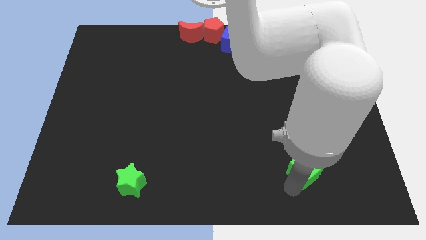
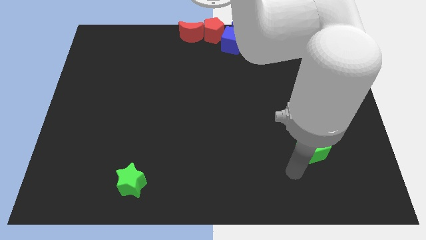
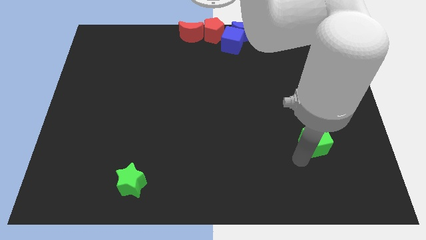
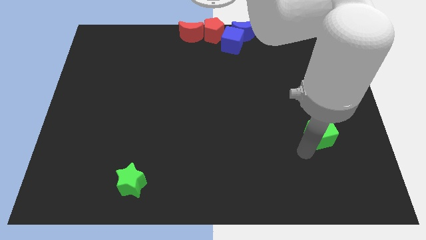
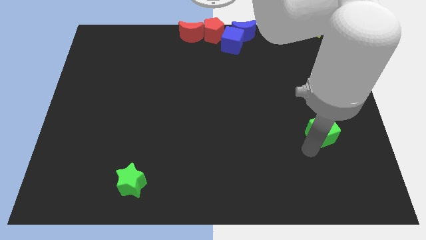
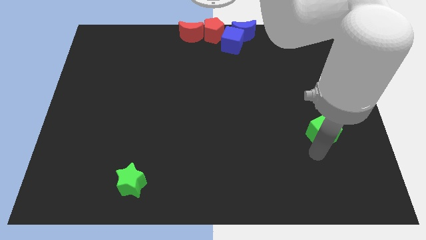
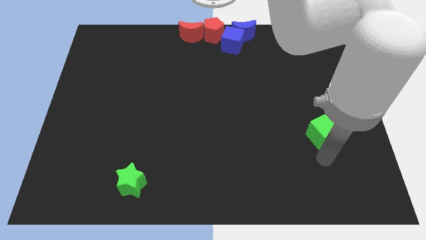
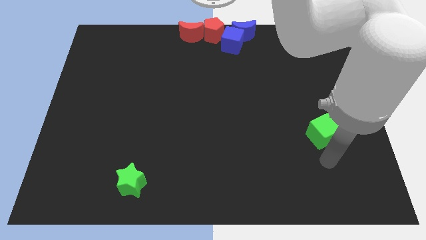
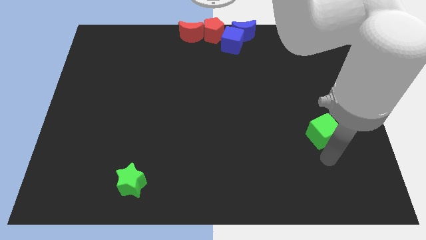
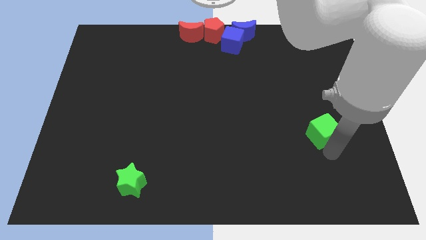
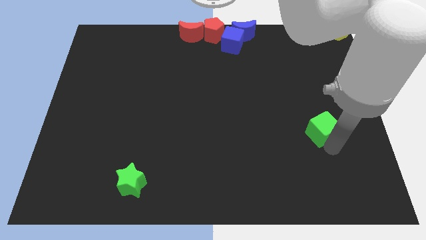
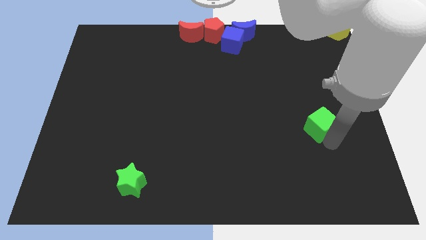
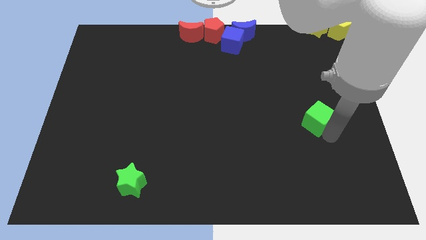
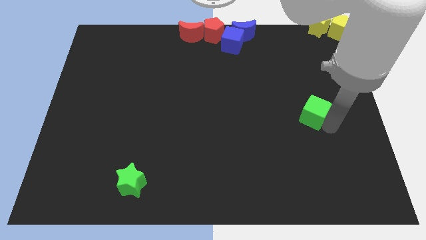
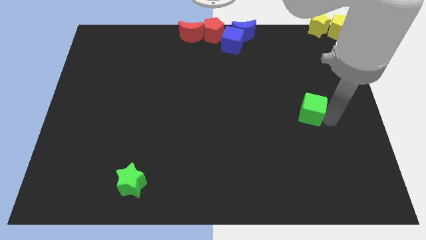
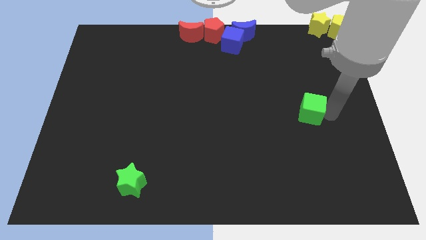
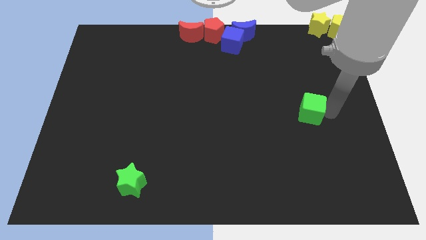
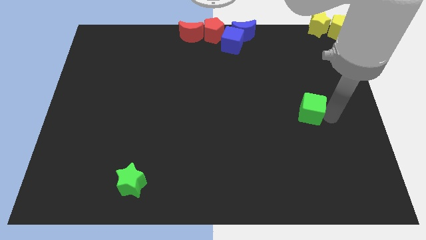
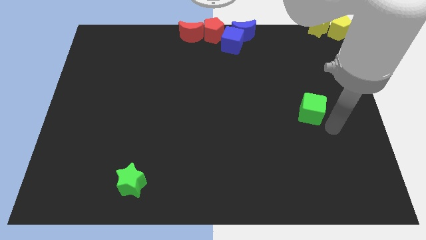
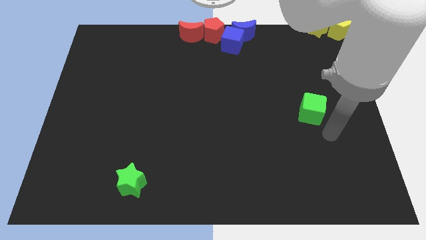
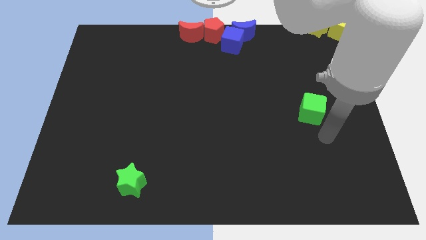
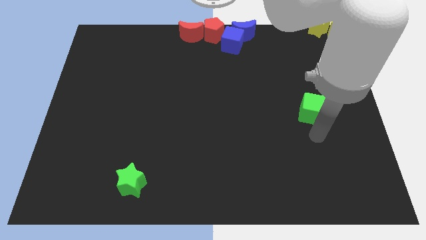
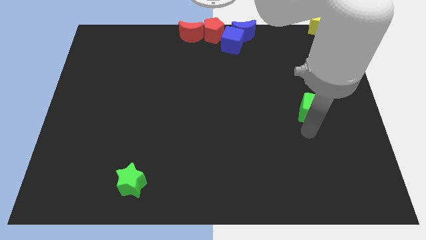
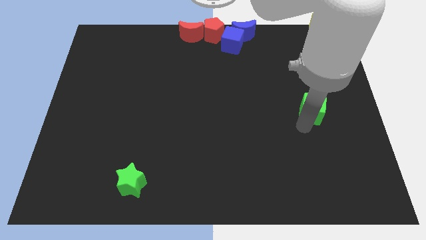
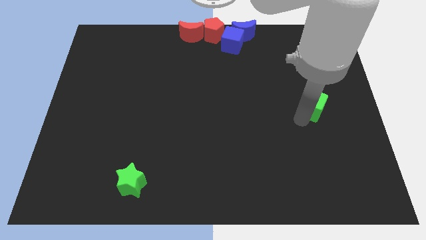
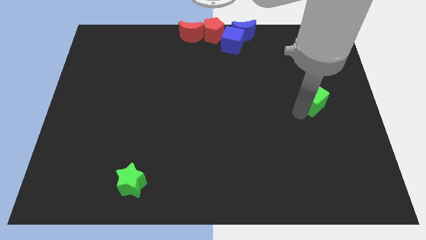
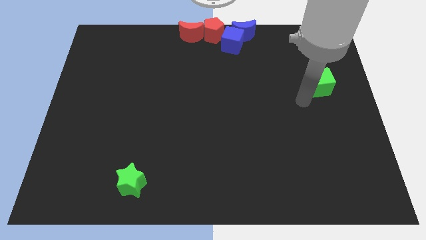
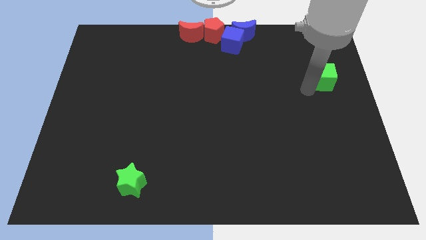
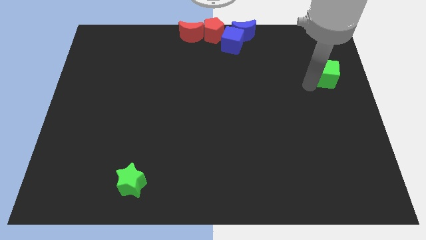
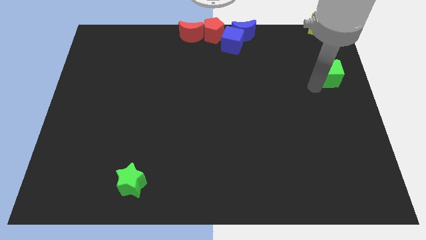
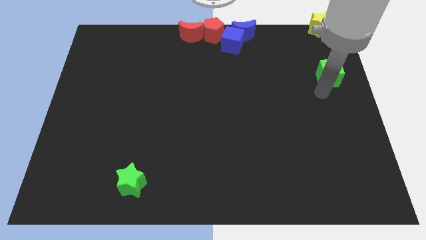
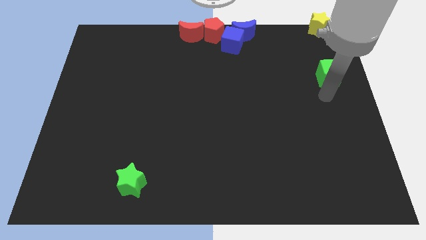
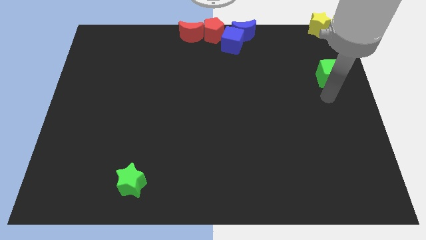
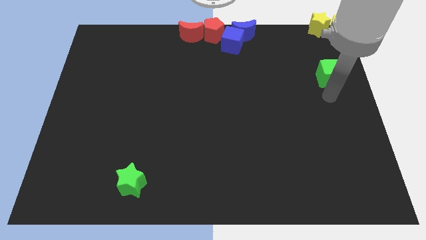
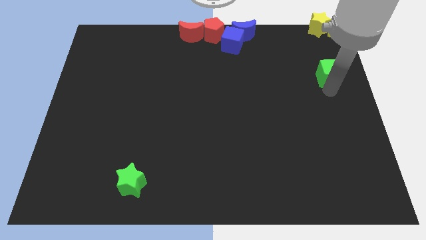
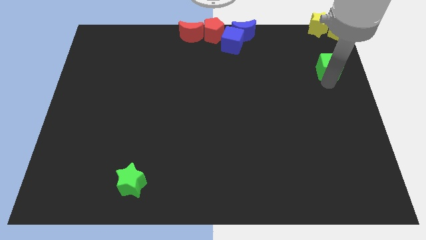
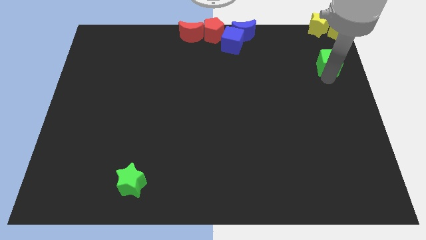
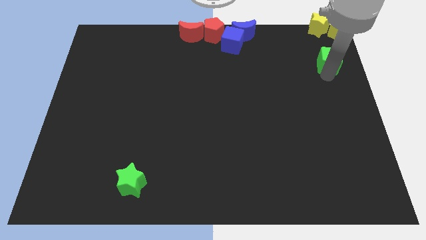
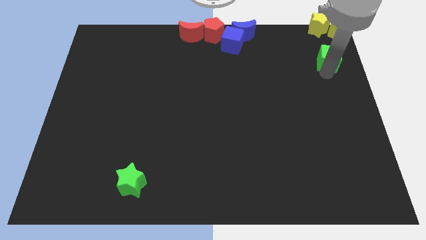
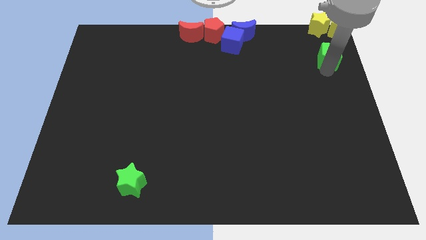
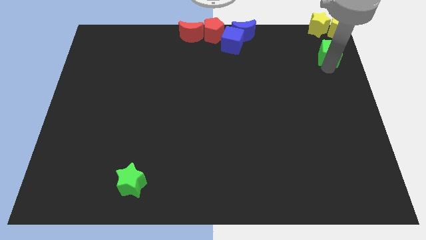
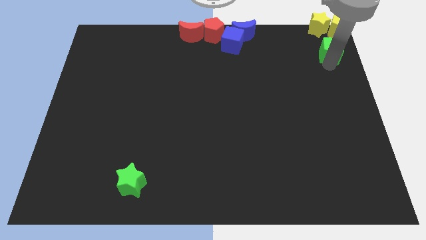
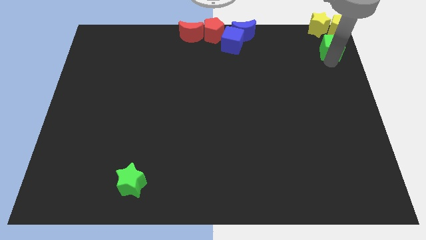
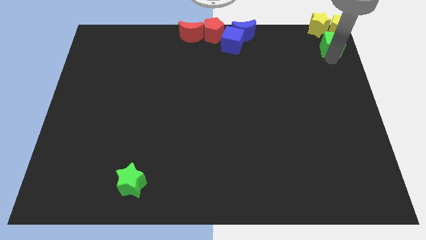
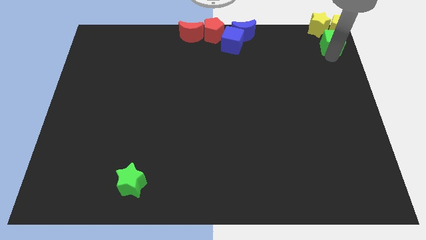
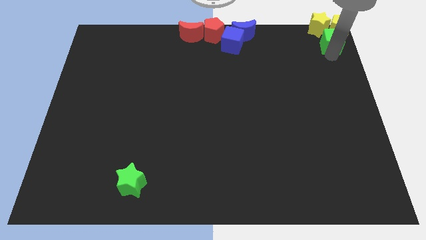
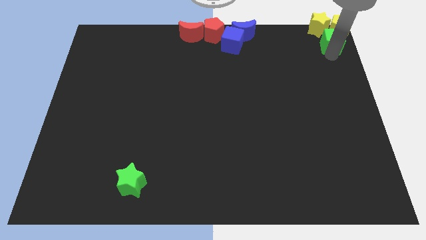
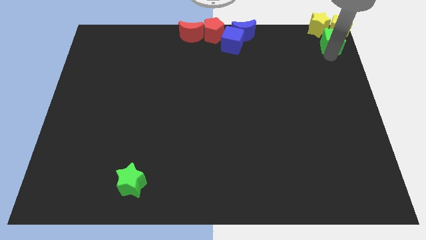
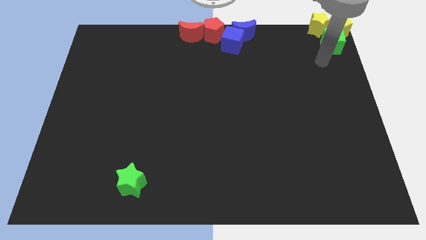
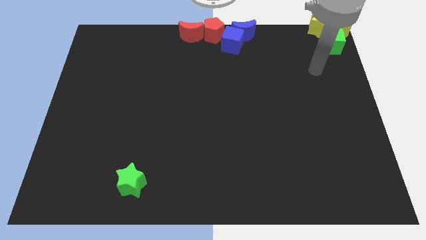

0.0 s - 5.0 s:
move green cube towards yellow blocks at the top right corner of the board

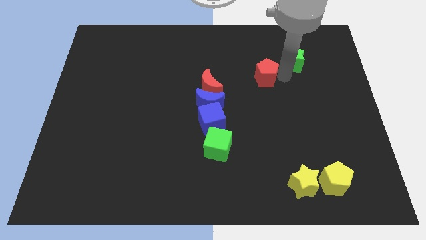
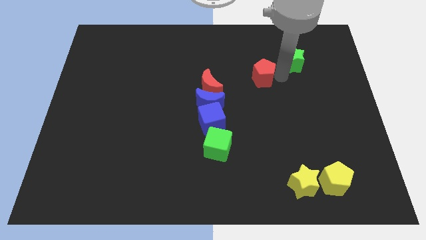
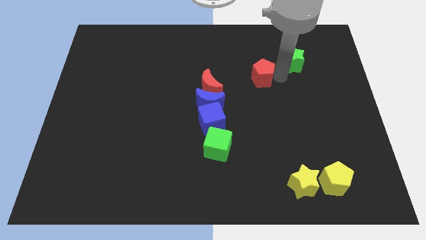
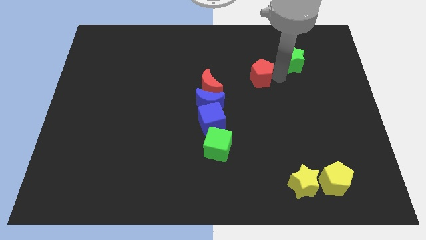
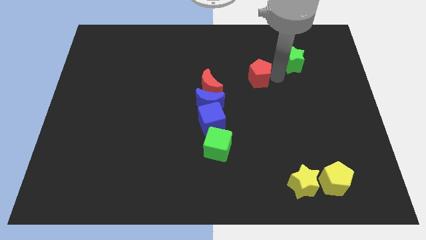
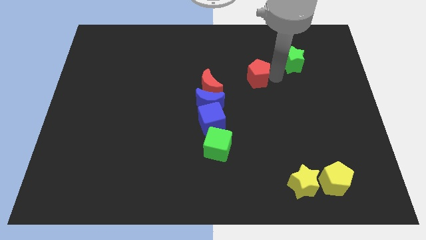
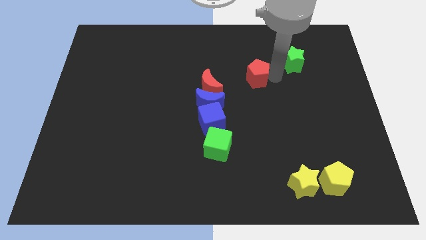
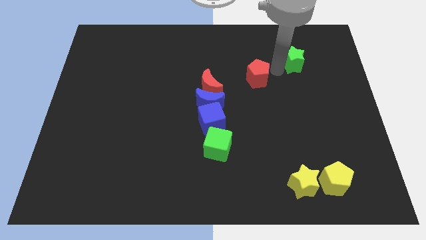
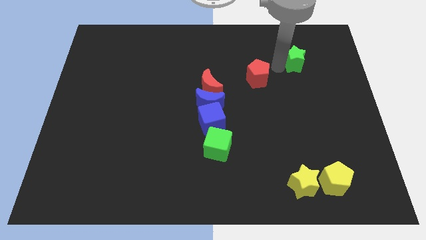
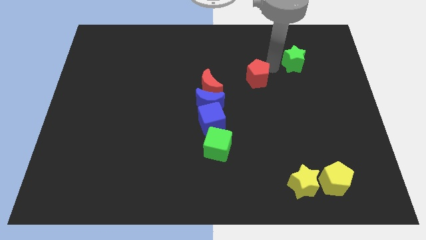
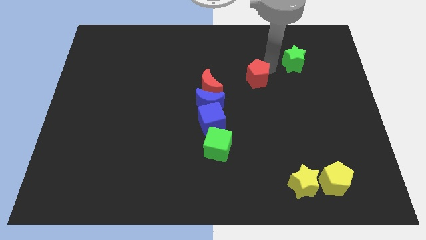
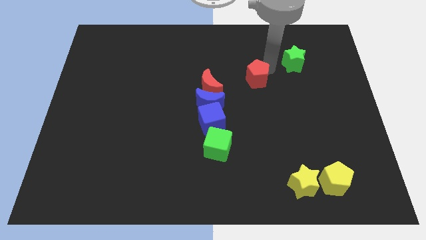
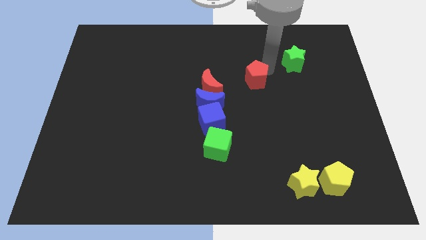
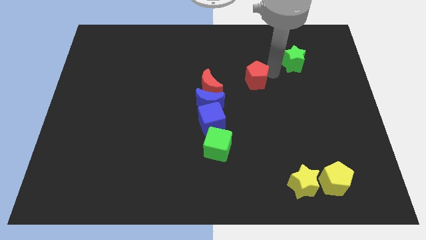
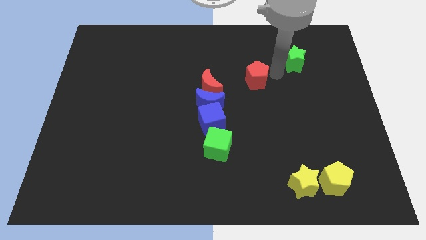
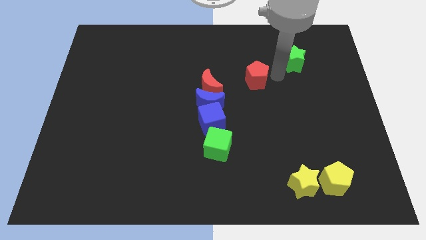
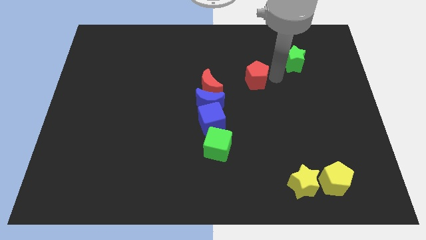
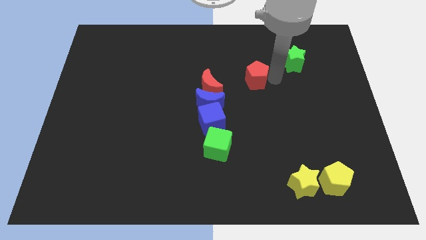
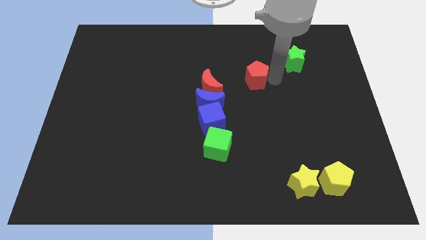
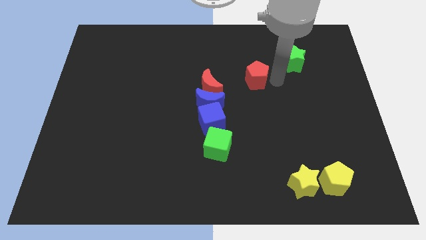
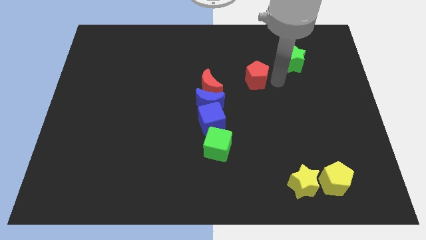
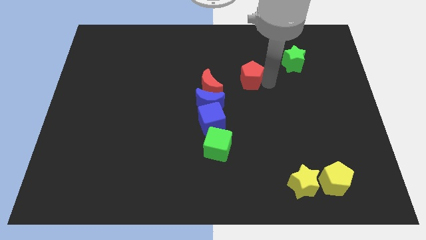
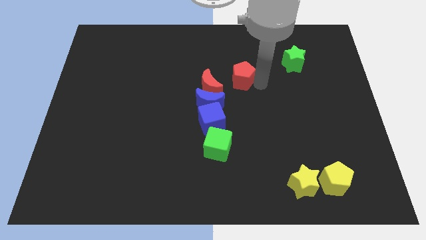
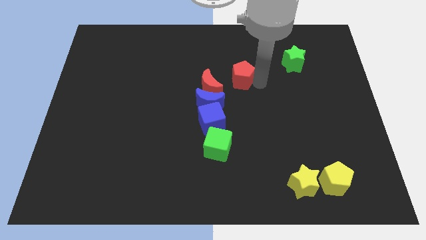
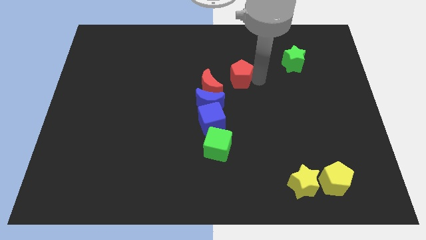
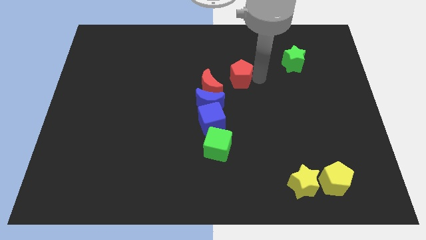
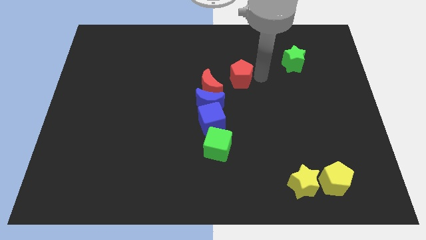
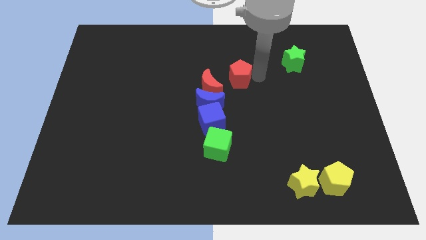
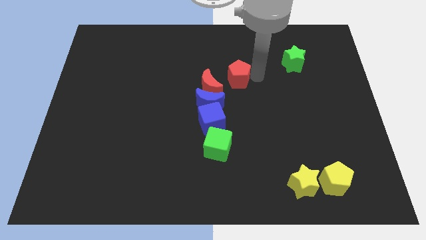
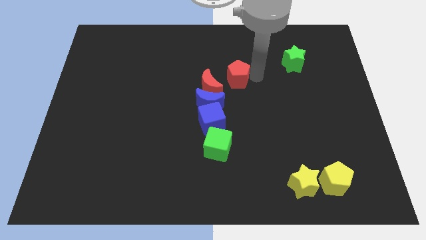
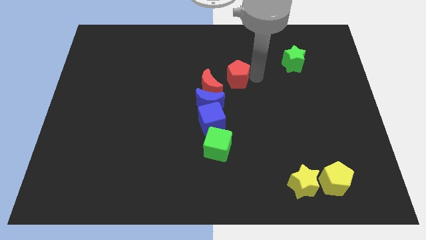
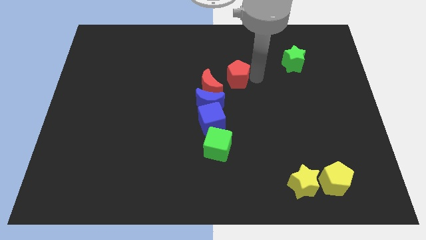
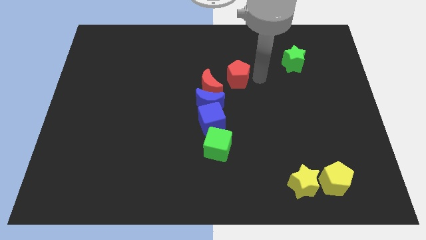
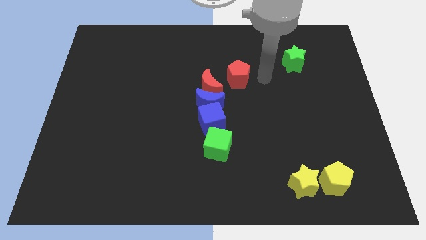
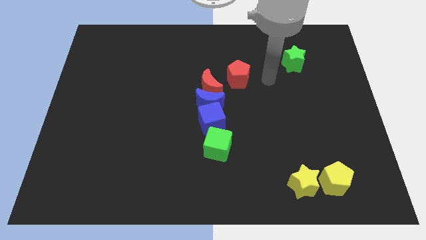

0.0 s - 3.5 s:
move the red pentagon near to red crescent and slightly push the green star

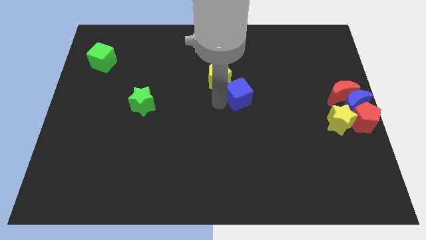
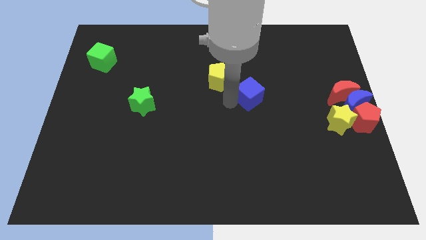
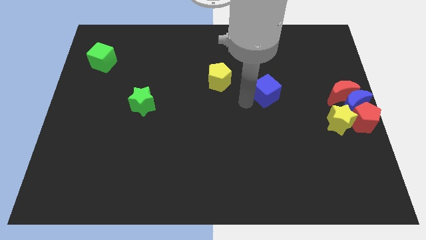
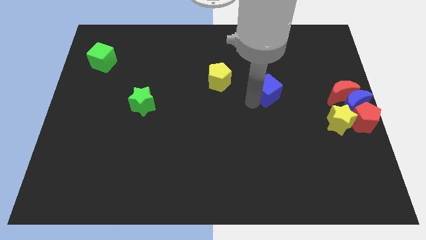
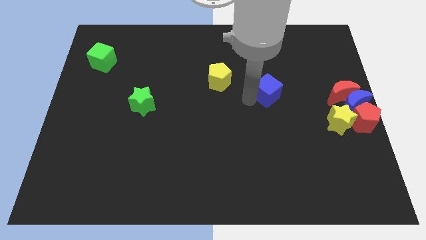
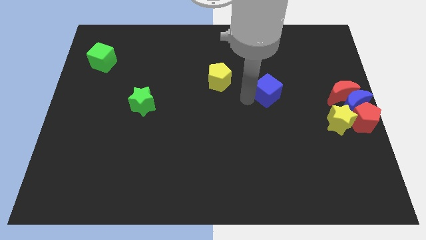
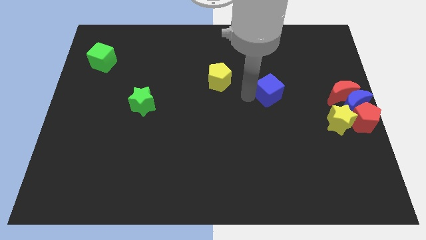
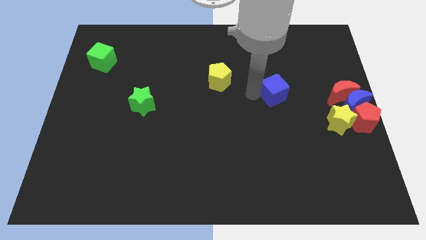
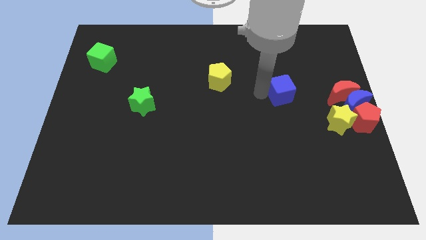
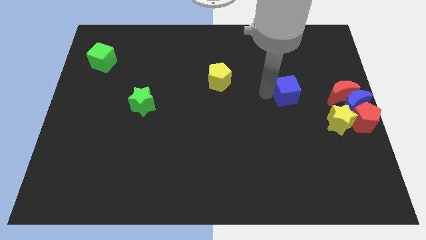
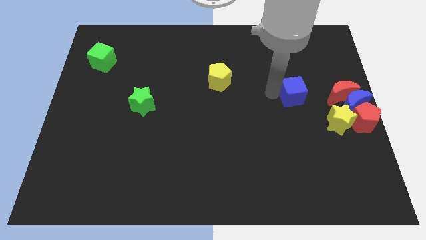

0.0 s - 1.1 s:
separate the blue cube from the yellow pentagon
